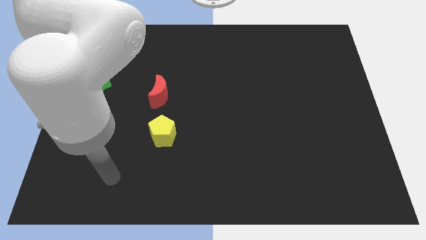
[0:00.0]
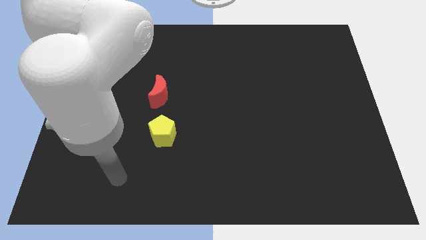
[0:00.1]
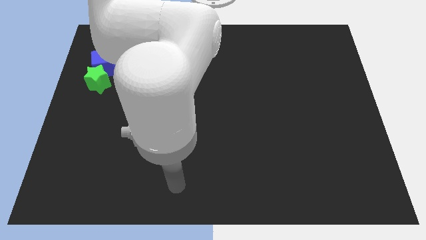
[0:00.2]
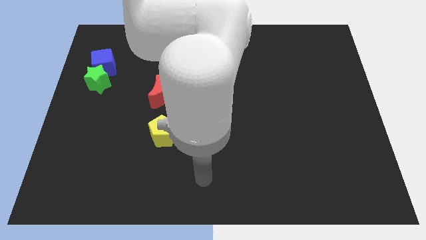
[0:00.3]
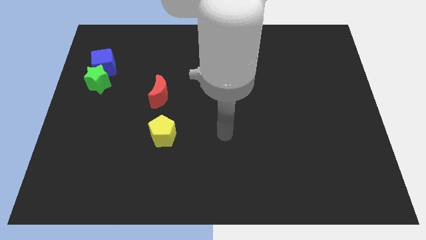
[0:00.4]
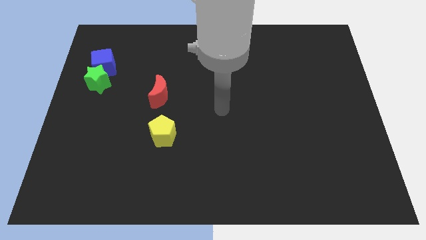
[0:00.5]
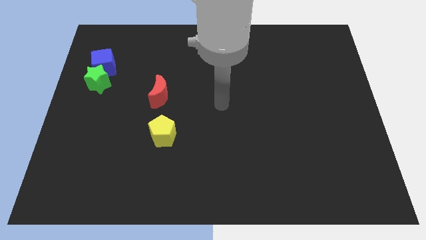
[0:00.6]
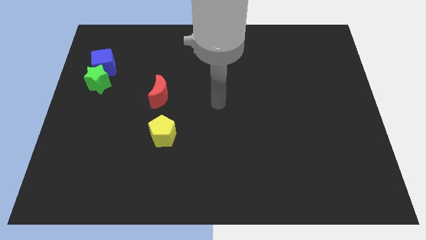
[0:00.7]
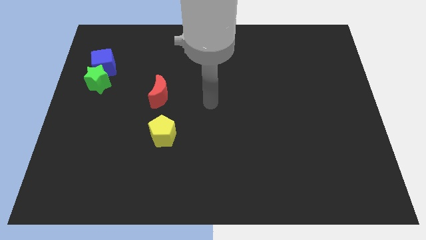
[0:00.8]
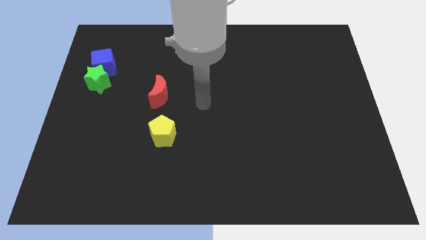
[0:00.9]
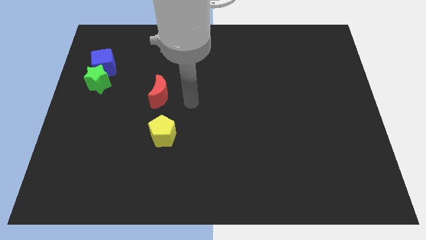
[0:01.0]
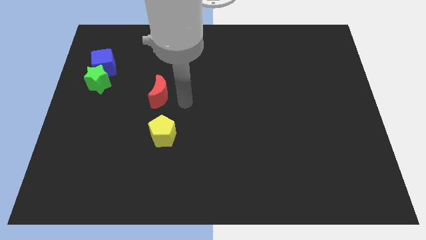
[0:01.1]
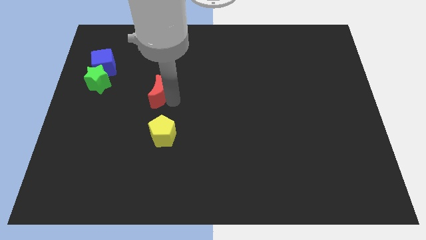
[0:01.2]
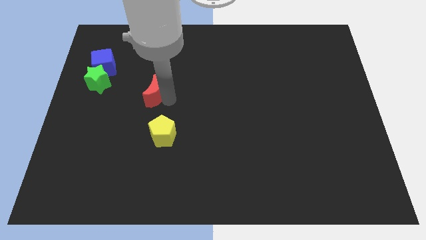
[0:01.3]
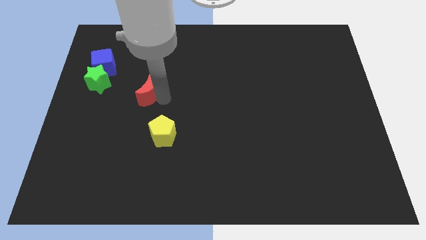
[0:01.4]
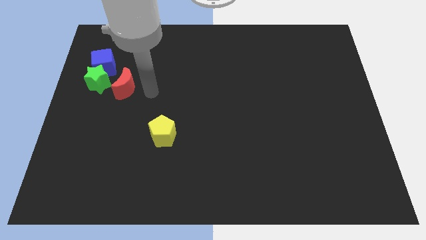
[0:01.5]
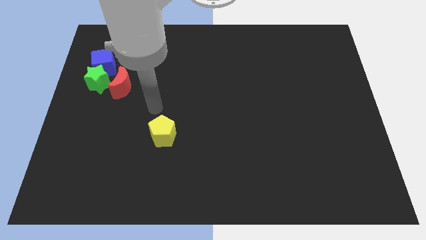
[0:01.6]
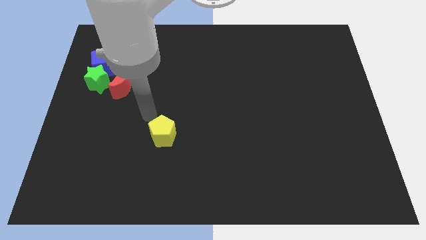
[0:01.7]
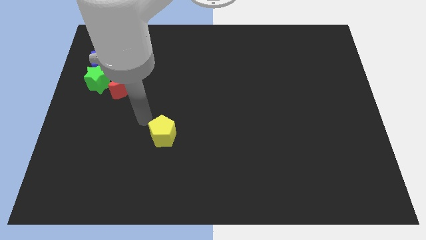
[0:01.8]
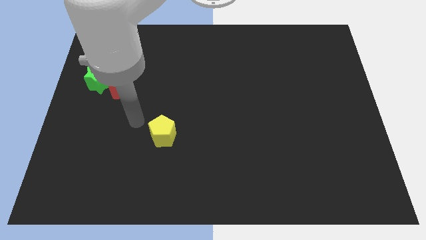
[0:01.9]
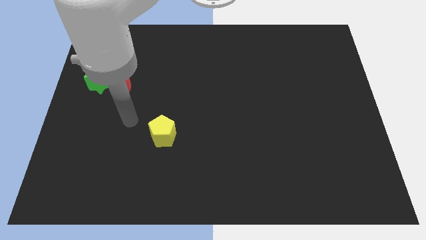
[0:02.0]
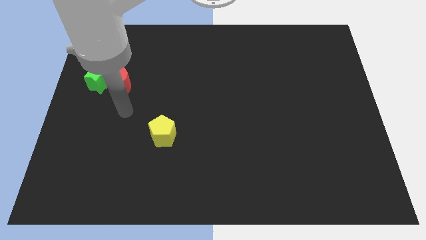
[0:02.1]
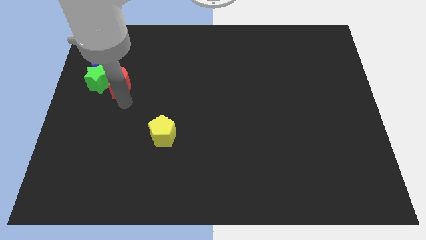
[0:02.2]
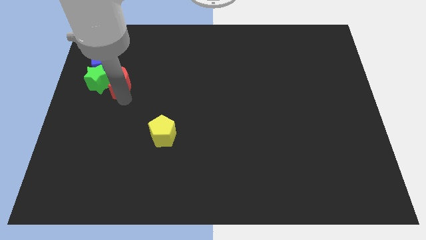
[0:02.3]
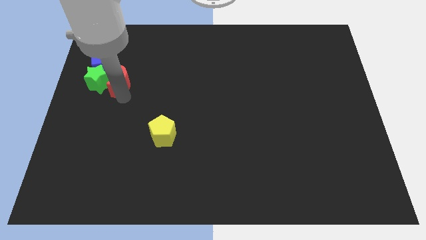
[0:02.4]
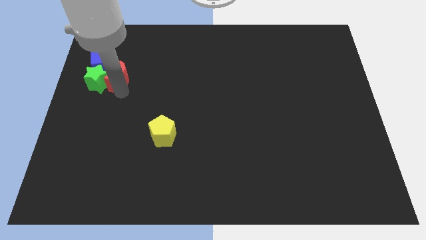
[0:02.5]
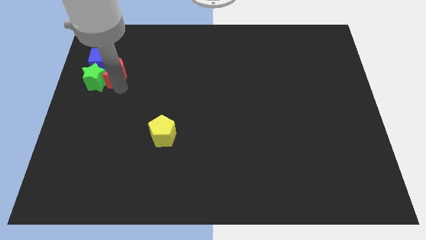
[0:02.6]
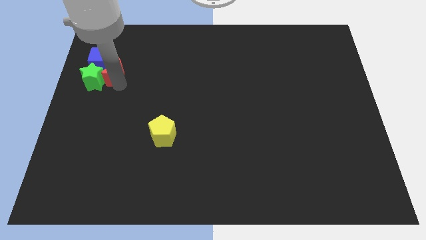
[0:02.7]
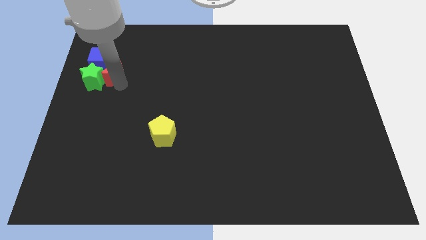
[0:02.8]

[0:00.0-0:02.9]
put the moon towards the blue cube

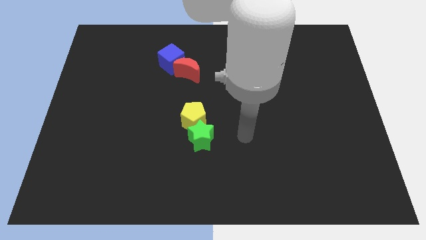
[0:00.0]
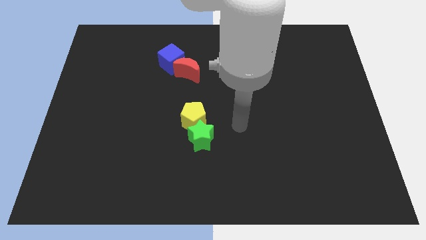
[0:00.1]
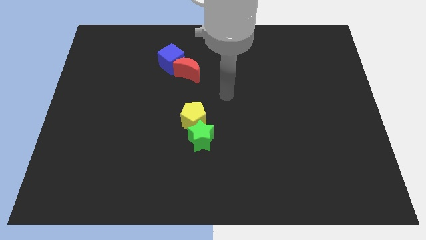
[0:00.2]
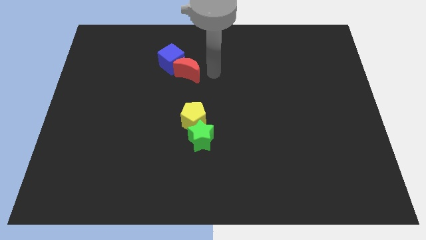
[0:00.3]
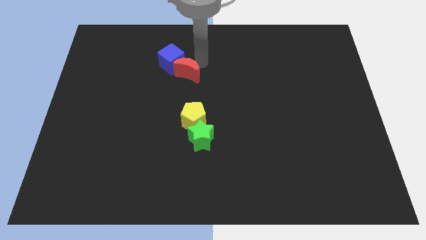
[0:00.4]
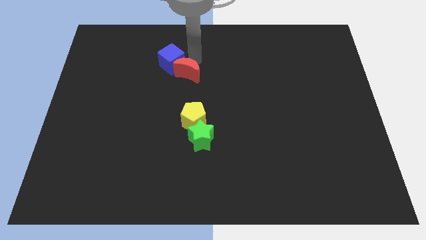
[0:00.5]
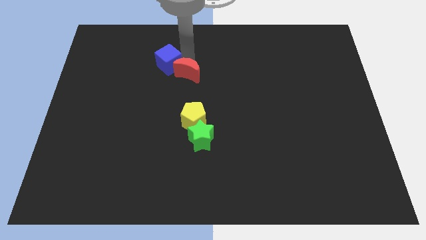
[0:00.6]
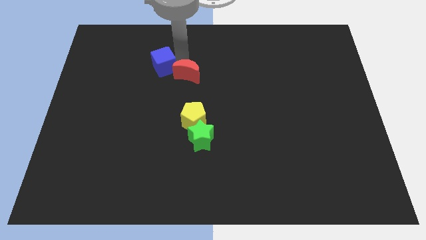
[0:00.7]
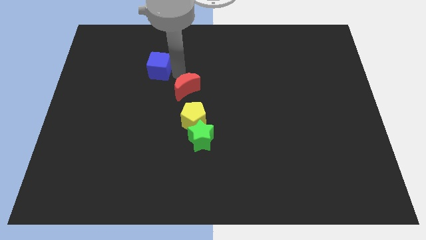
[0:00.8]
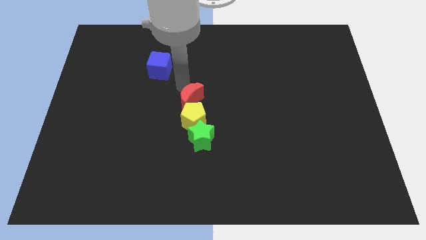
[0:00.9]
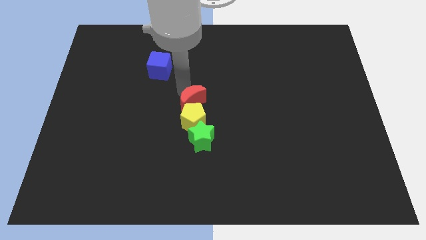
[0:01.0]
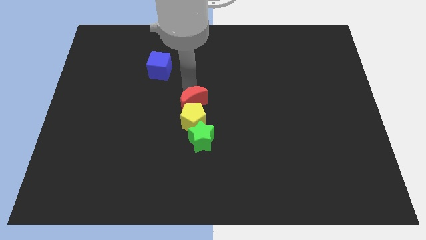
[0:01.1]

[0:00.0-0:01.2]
put the red moon close to the pentagon

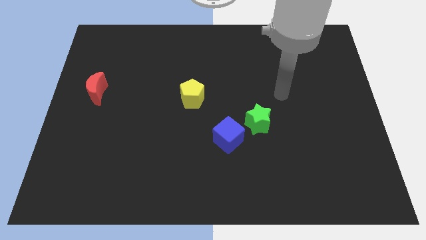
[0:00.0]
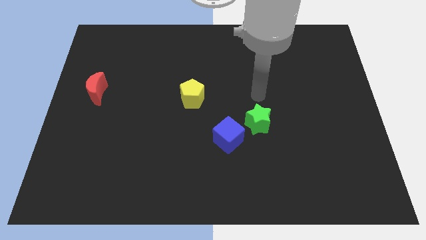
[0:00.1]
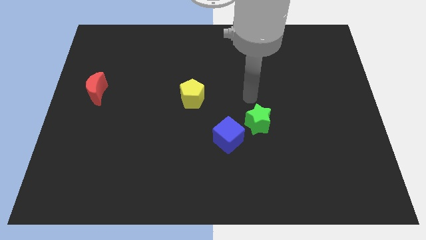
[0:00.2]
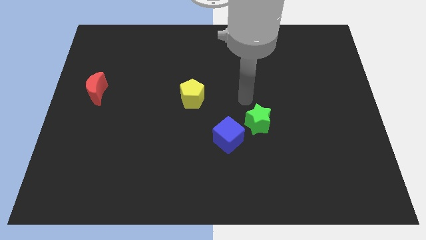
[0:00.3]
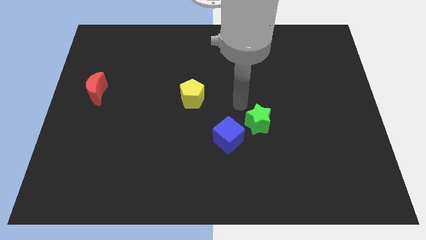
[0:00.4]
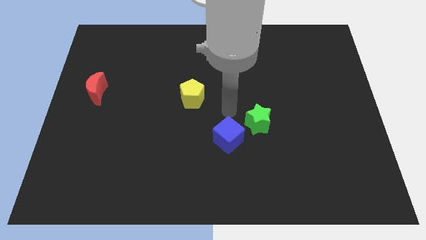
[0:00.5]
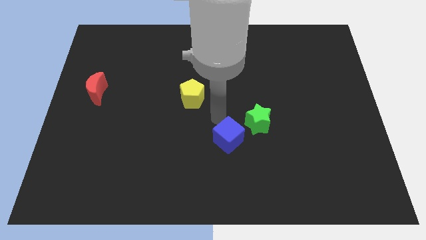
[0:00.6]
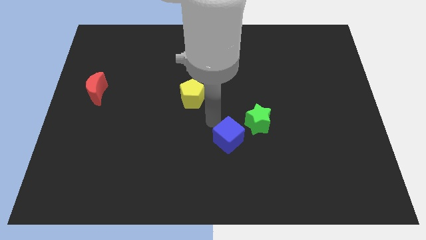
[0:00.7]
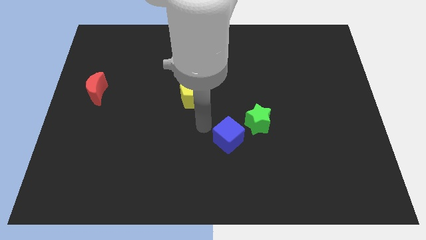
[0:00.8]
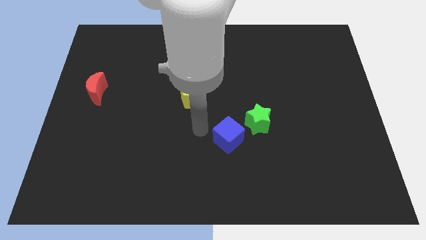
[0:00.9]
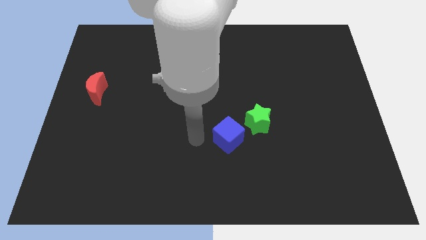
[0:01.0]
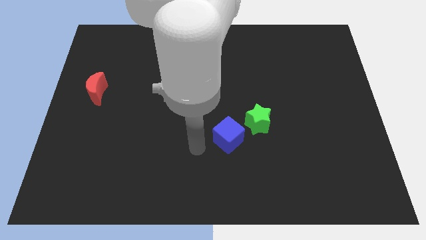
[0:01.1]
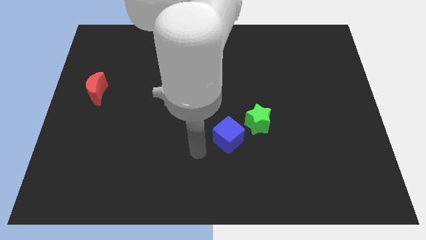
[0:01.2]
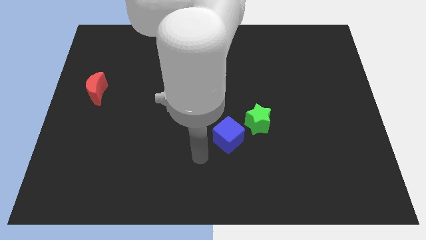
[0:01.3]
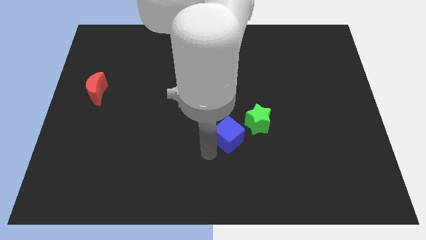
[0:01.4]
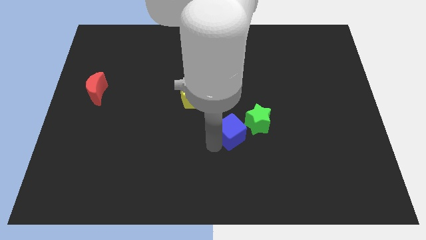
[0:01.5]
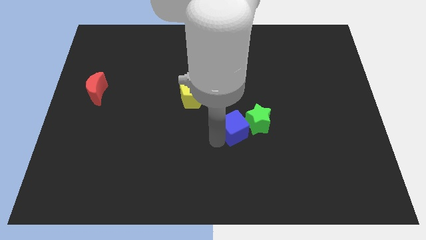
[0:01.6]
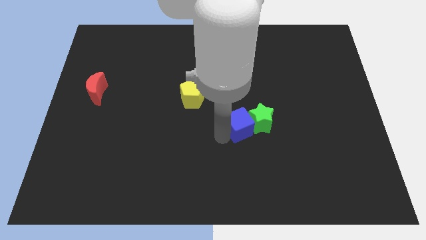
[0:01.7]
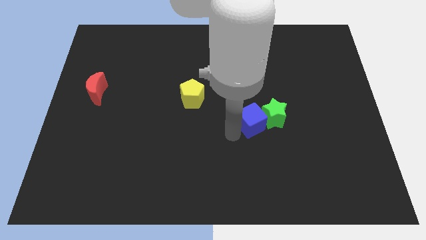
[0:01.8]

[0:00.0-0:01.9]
move the blue block next to the green star

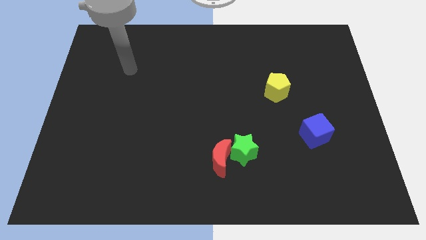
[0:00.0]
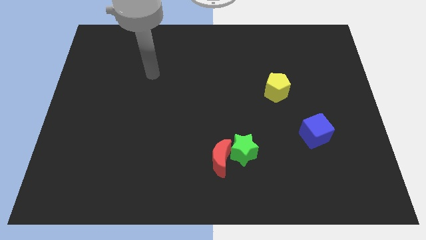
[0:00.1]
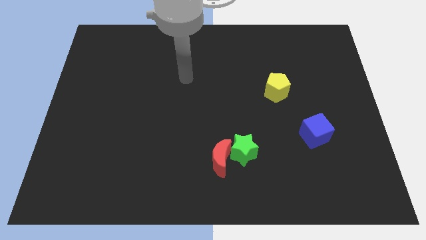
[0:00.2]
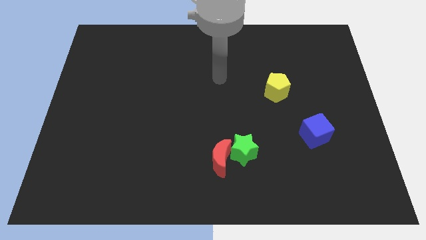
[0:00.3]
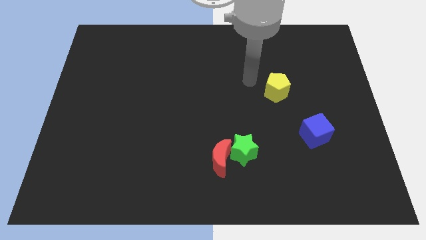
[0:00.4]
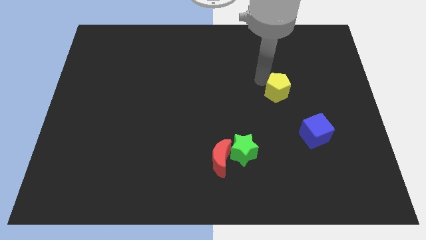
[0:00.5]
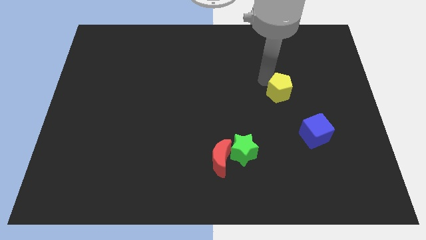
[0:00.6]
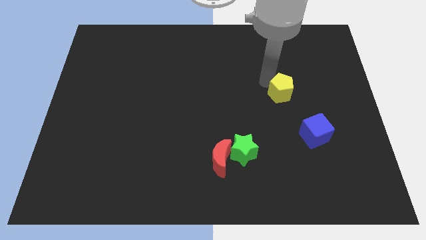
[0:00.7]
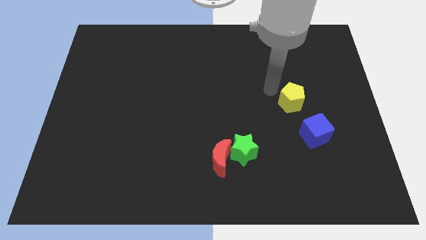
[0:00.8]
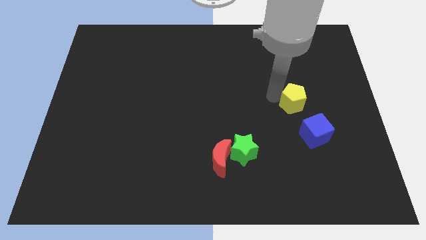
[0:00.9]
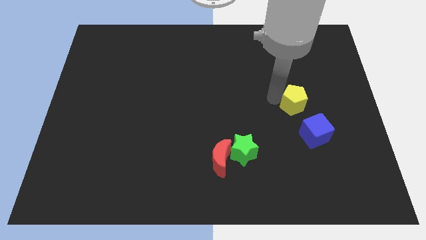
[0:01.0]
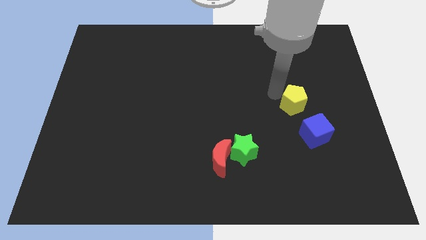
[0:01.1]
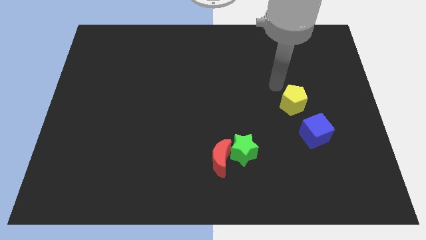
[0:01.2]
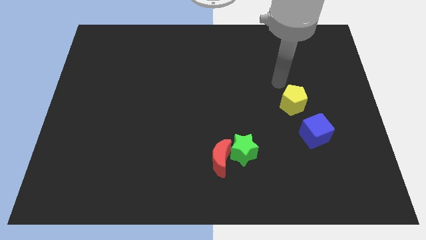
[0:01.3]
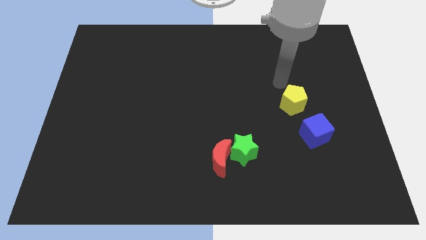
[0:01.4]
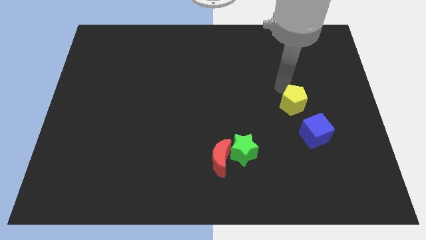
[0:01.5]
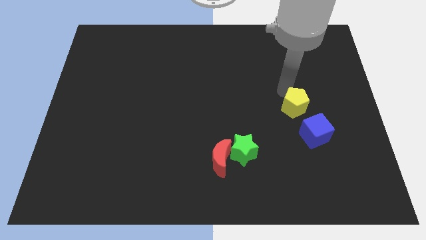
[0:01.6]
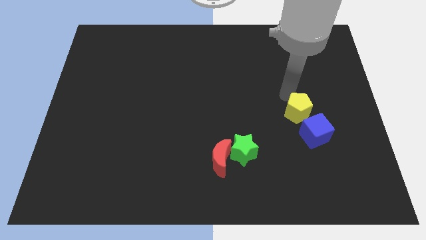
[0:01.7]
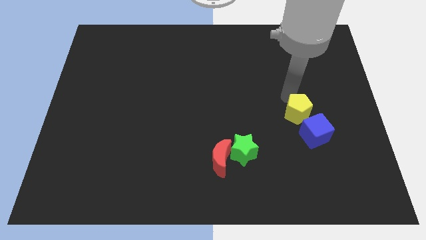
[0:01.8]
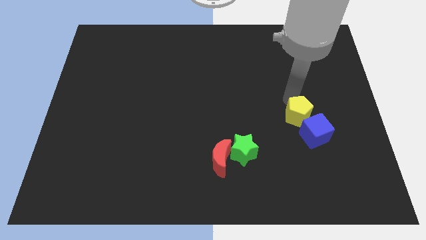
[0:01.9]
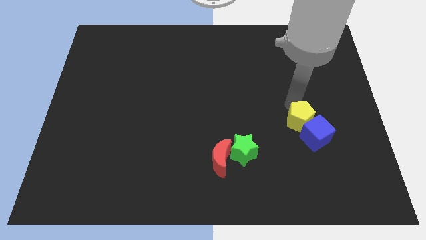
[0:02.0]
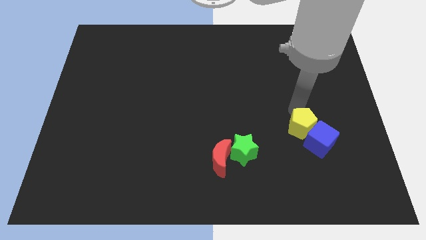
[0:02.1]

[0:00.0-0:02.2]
move the pentagon next to the blue cube

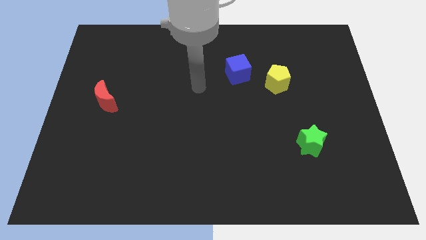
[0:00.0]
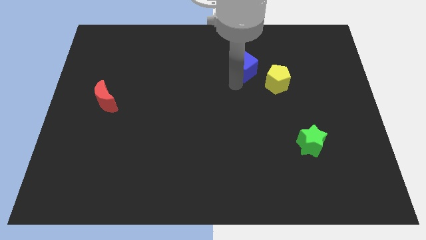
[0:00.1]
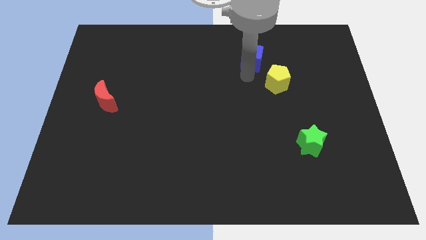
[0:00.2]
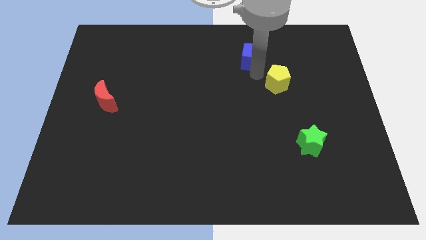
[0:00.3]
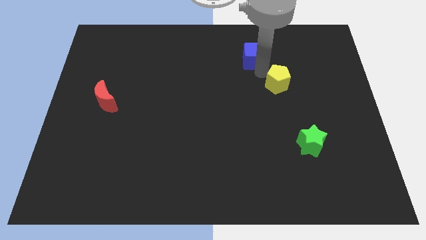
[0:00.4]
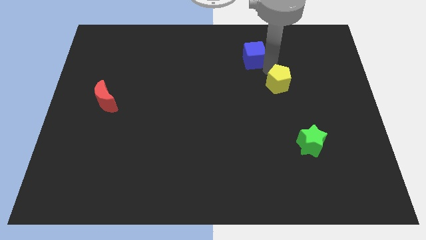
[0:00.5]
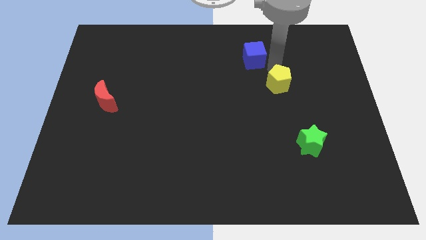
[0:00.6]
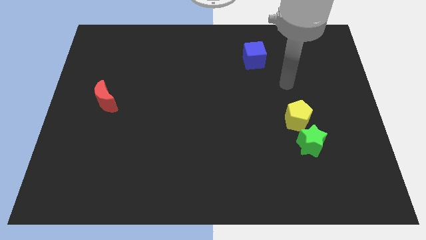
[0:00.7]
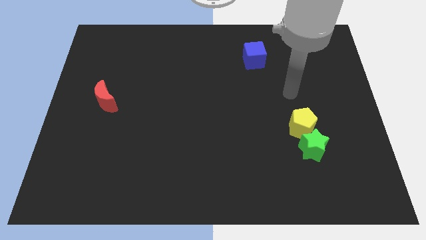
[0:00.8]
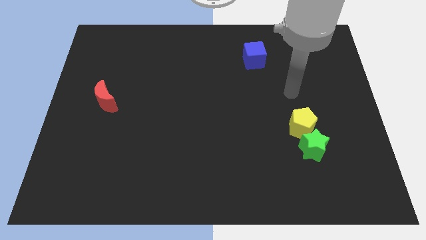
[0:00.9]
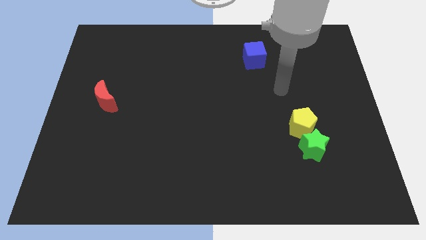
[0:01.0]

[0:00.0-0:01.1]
put the yellow block next to the green star
